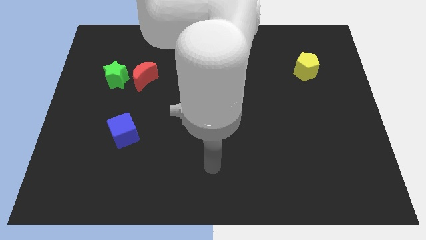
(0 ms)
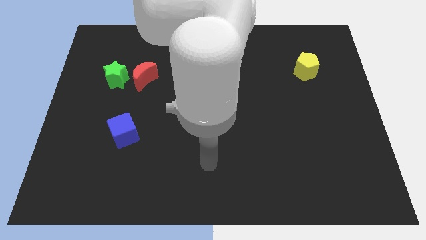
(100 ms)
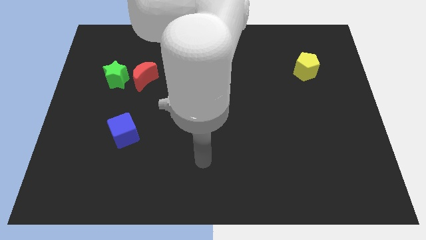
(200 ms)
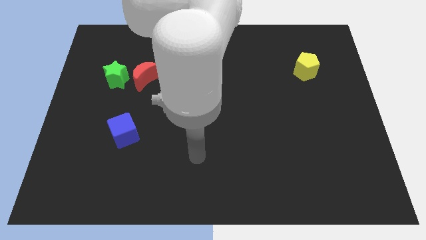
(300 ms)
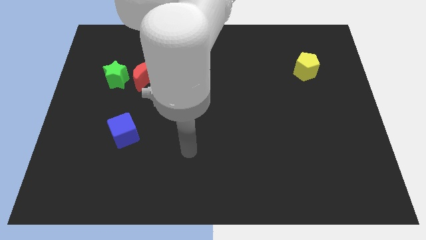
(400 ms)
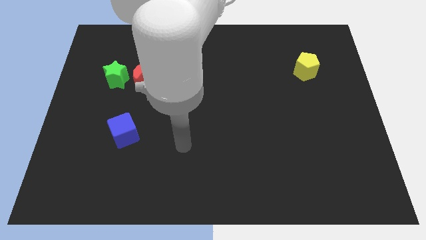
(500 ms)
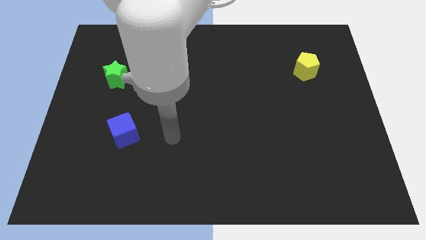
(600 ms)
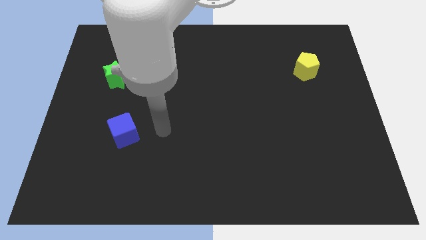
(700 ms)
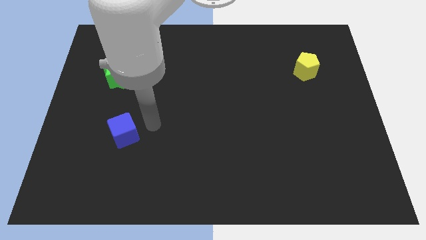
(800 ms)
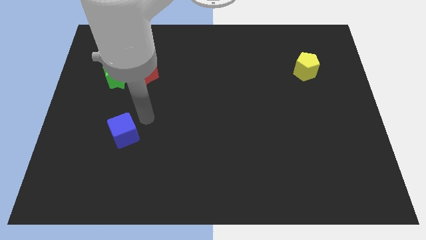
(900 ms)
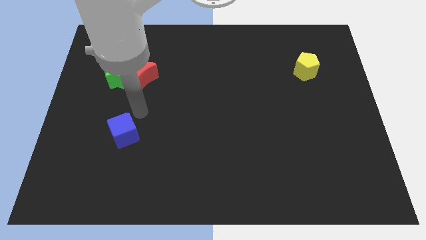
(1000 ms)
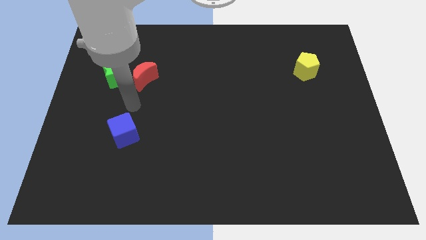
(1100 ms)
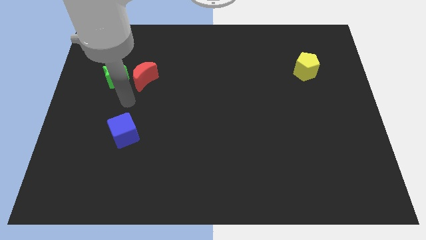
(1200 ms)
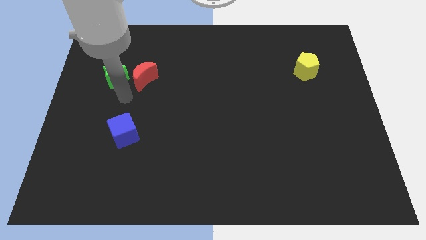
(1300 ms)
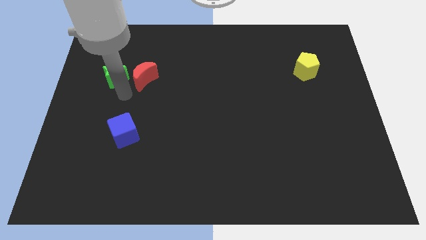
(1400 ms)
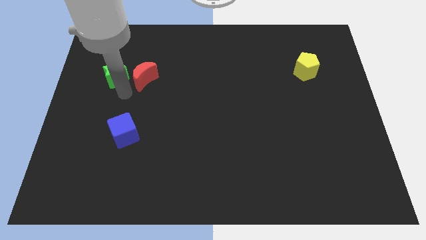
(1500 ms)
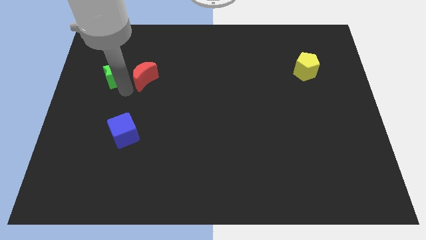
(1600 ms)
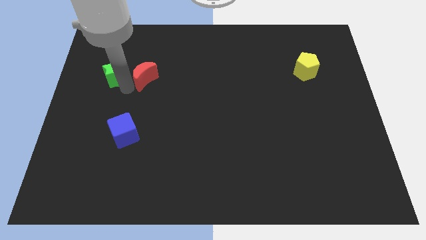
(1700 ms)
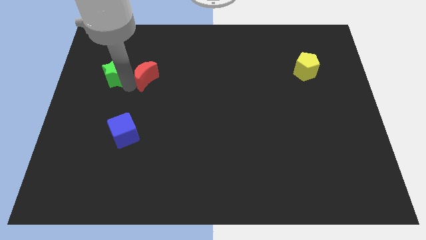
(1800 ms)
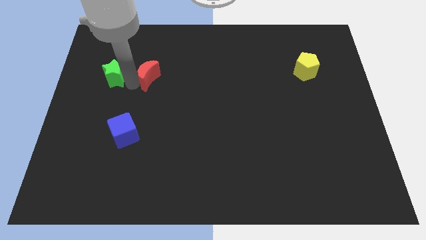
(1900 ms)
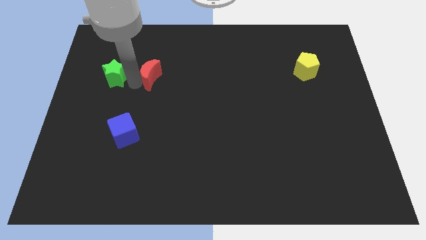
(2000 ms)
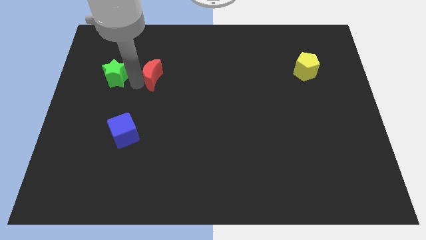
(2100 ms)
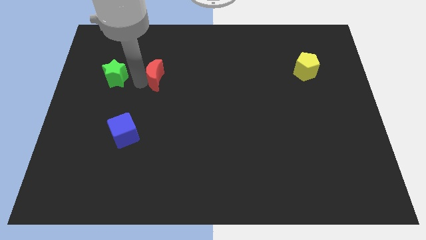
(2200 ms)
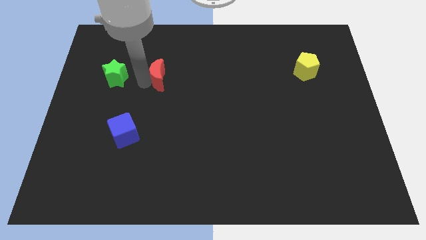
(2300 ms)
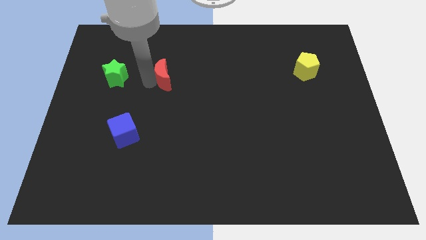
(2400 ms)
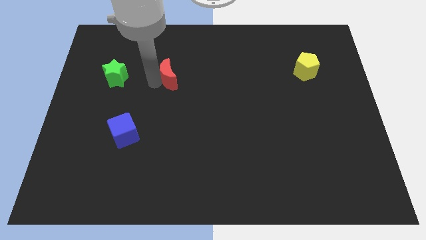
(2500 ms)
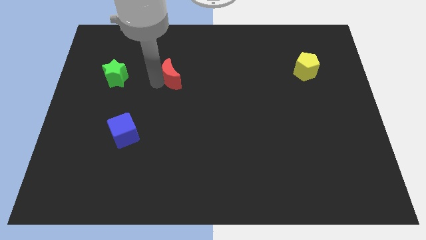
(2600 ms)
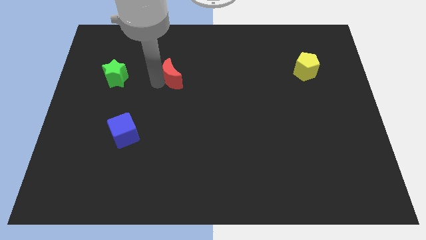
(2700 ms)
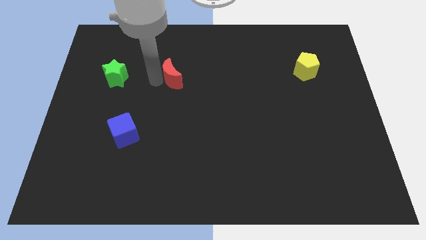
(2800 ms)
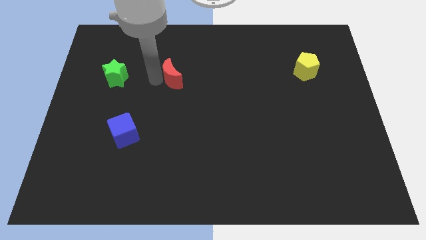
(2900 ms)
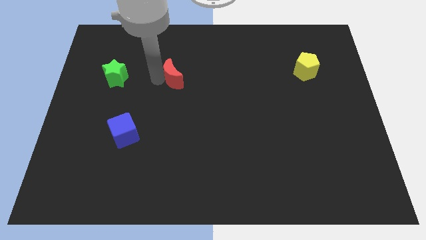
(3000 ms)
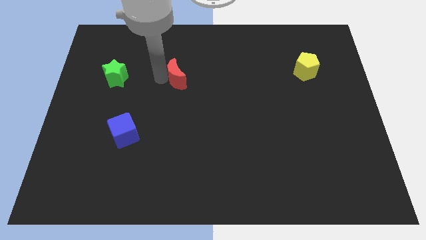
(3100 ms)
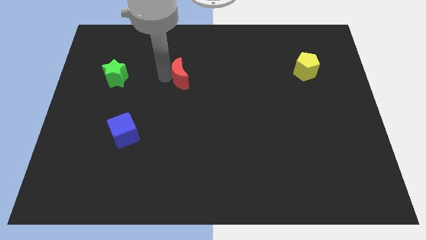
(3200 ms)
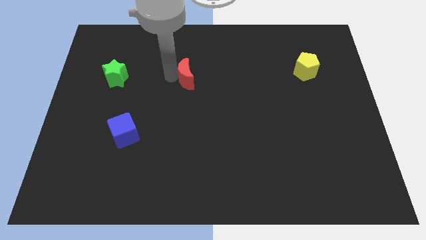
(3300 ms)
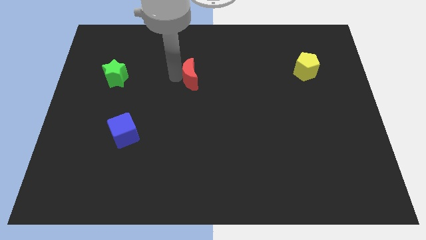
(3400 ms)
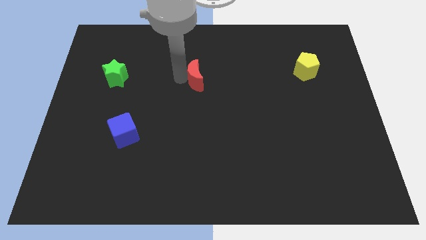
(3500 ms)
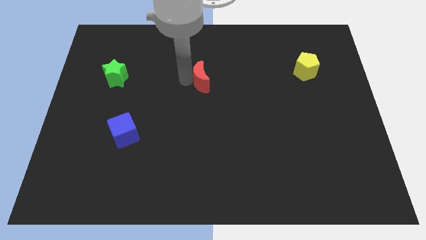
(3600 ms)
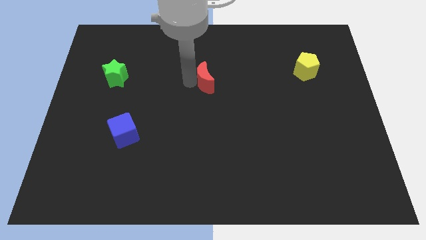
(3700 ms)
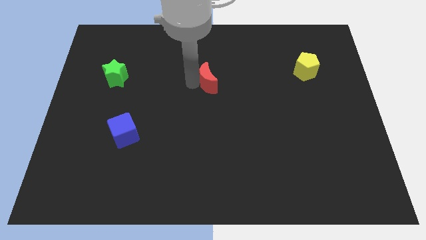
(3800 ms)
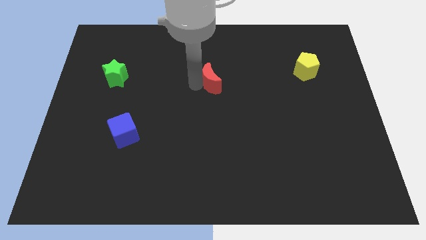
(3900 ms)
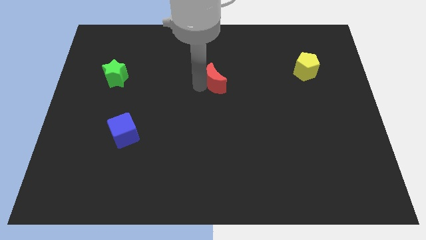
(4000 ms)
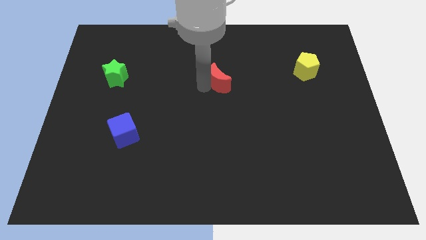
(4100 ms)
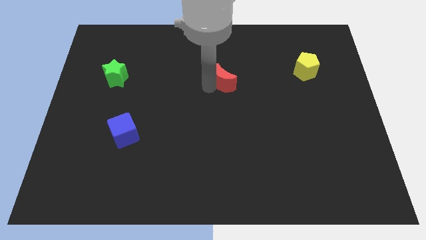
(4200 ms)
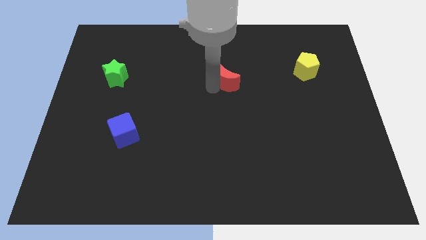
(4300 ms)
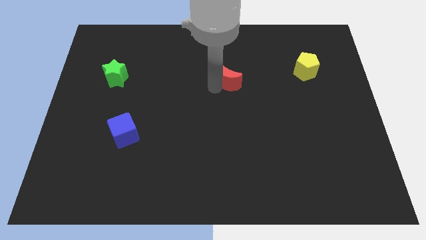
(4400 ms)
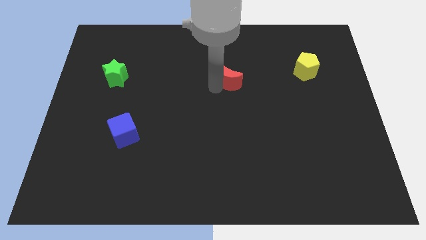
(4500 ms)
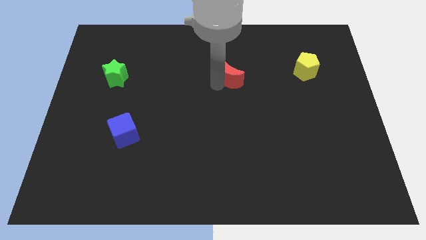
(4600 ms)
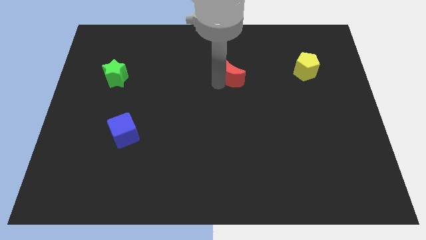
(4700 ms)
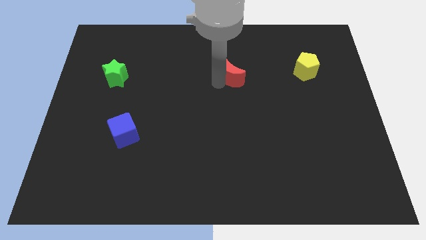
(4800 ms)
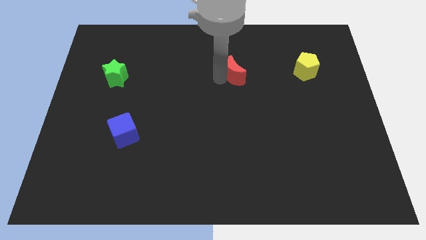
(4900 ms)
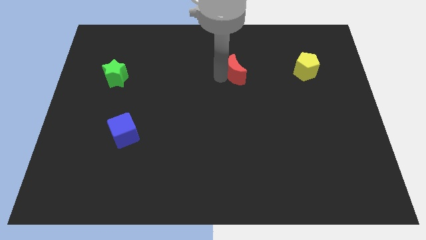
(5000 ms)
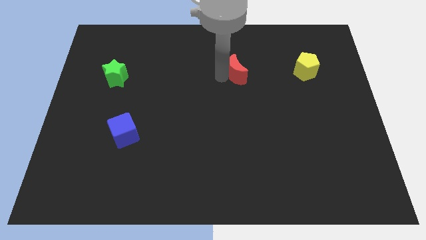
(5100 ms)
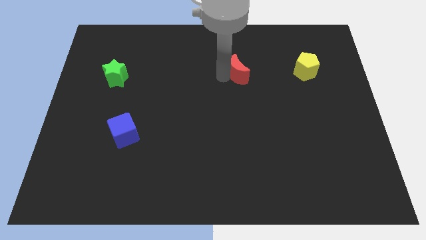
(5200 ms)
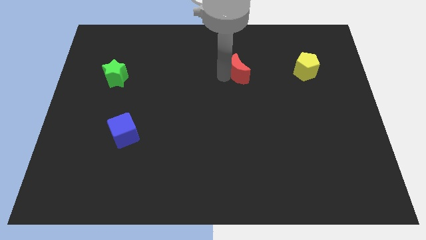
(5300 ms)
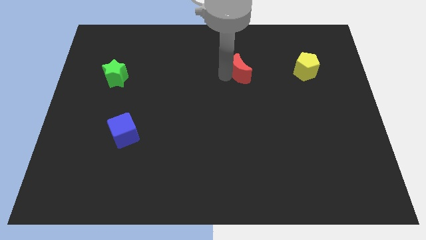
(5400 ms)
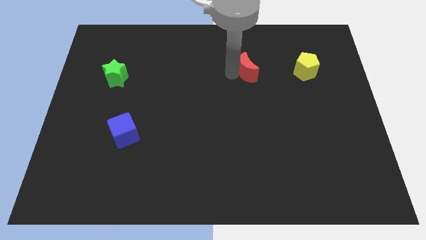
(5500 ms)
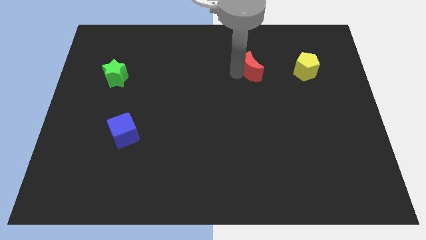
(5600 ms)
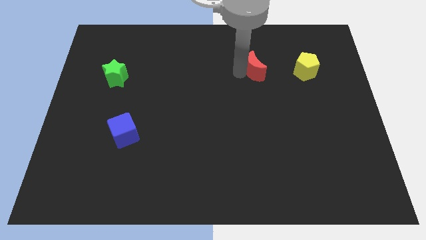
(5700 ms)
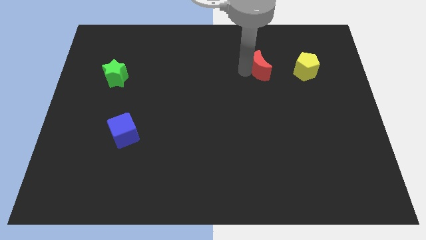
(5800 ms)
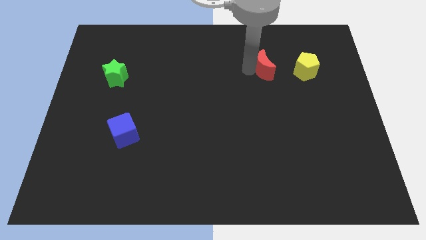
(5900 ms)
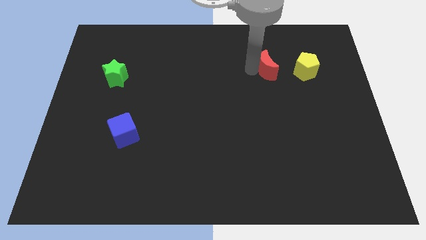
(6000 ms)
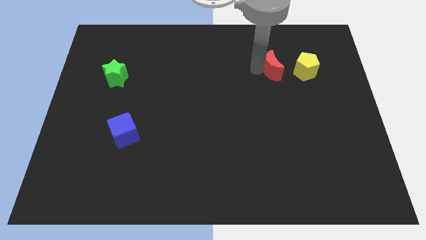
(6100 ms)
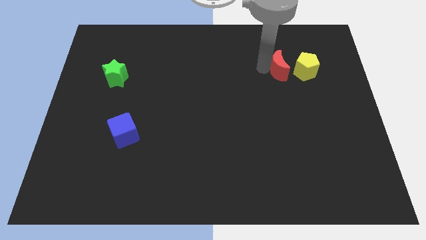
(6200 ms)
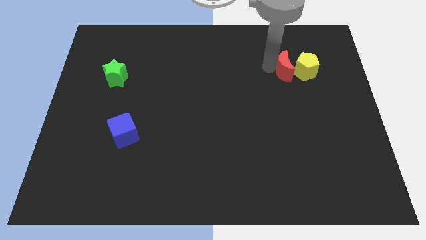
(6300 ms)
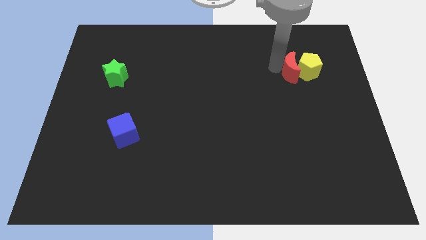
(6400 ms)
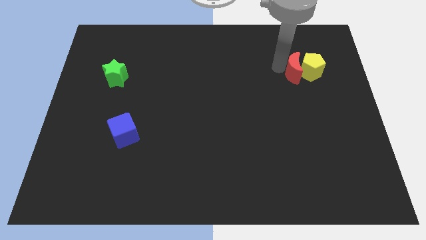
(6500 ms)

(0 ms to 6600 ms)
slide the red block towards the yellow pentagon

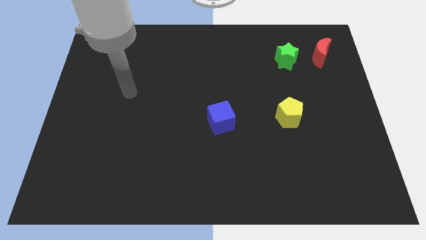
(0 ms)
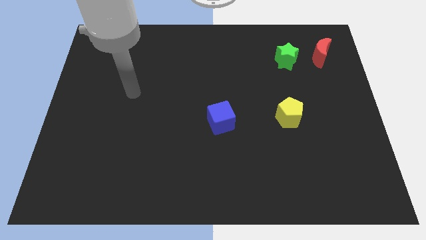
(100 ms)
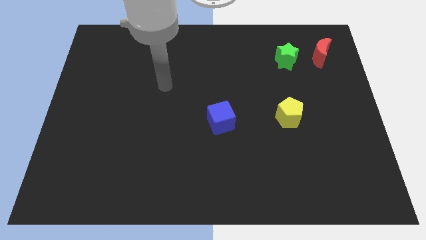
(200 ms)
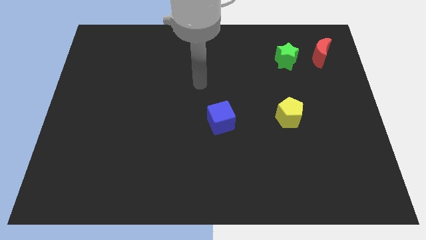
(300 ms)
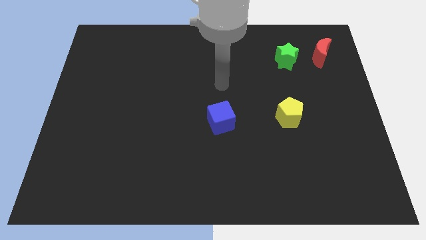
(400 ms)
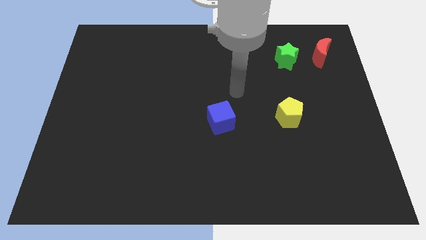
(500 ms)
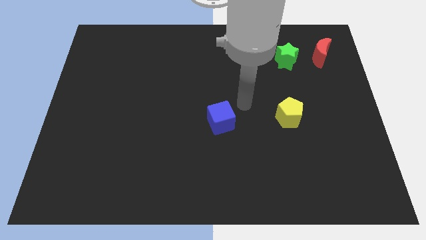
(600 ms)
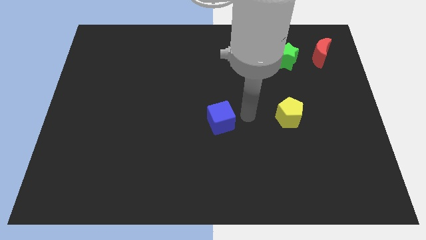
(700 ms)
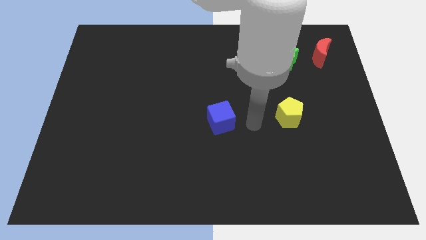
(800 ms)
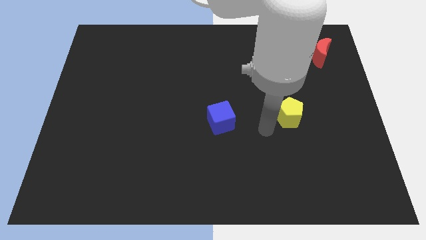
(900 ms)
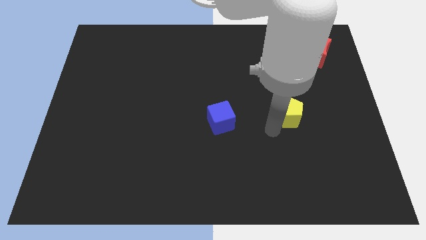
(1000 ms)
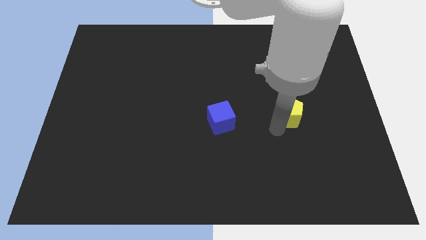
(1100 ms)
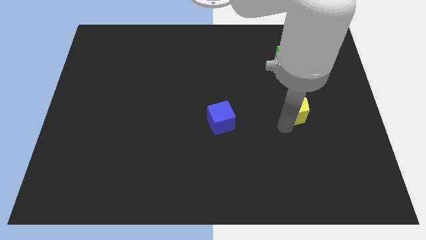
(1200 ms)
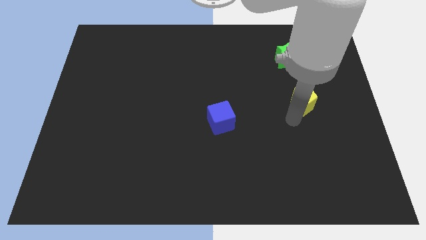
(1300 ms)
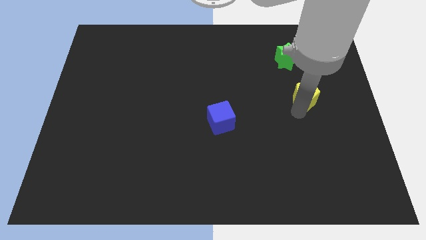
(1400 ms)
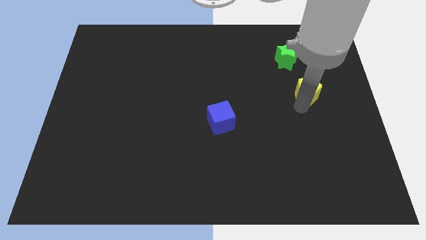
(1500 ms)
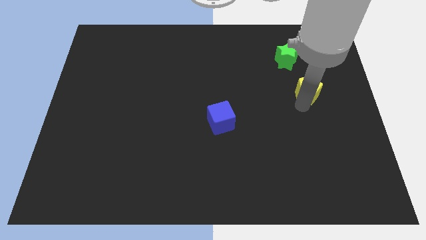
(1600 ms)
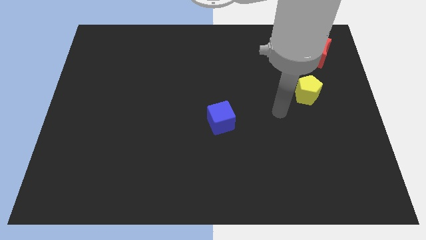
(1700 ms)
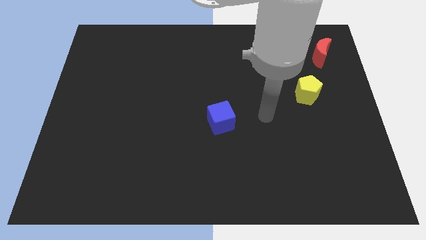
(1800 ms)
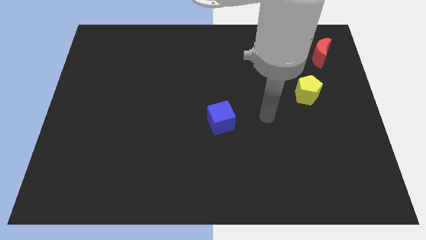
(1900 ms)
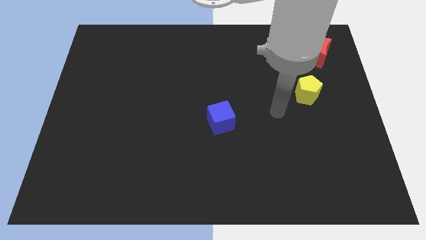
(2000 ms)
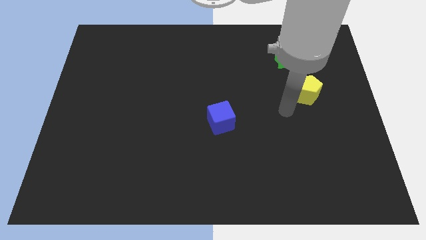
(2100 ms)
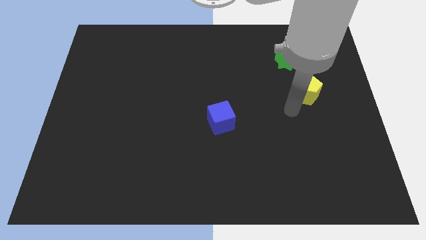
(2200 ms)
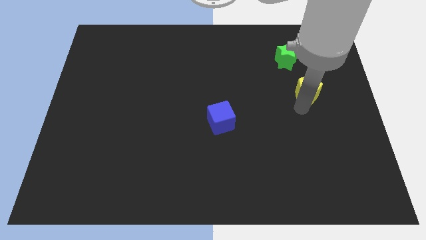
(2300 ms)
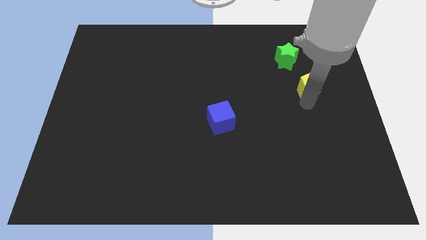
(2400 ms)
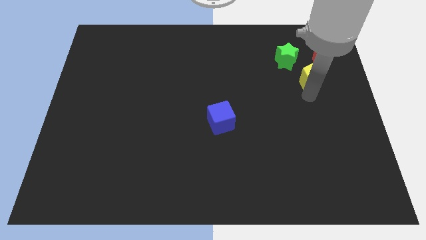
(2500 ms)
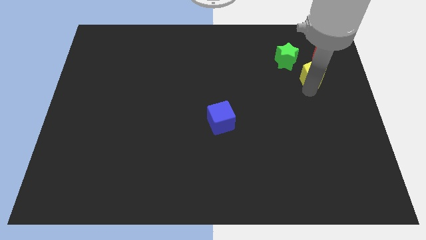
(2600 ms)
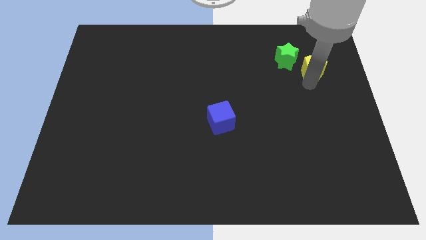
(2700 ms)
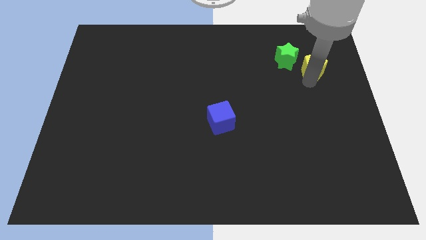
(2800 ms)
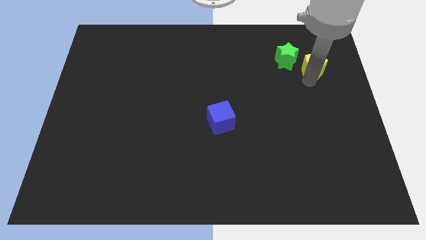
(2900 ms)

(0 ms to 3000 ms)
put the yellow block to the moon
